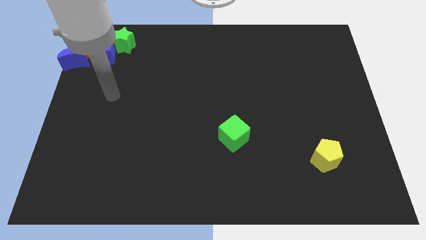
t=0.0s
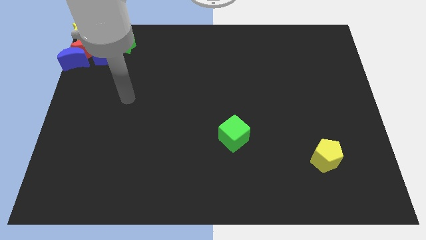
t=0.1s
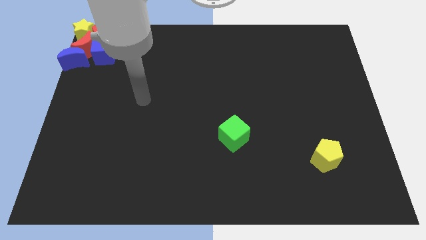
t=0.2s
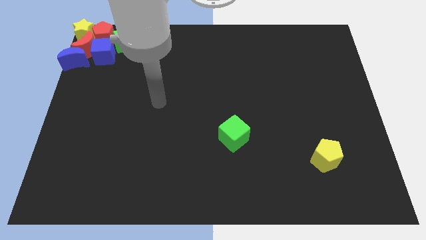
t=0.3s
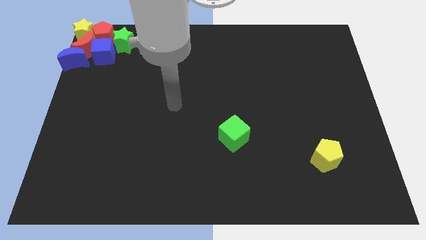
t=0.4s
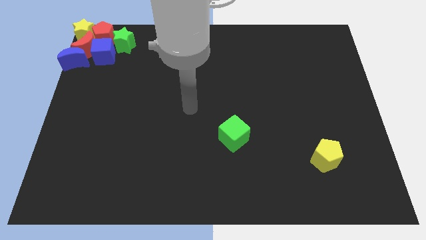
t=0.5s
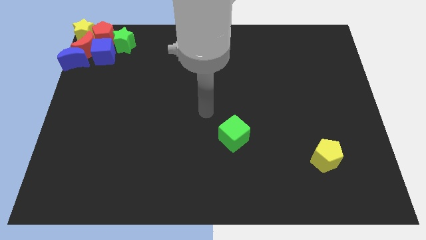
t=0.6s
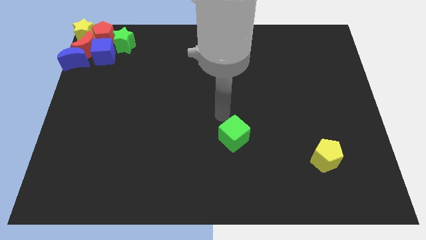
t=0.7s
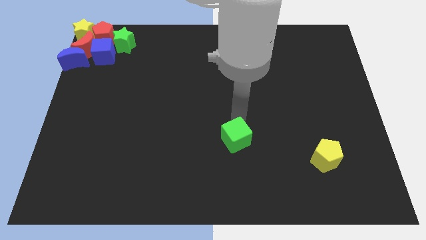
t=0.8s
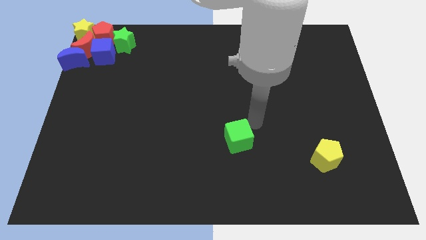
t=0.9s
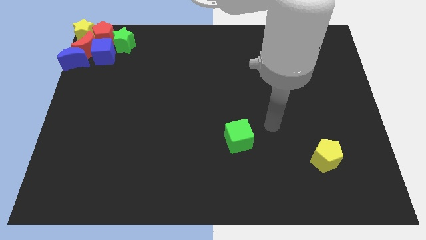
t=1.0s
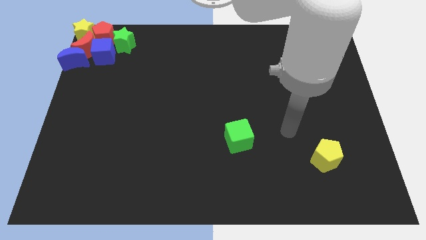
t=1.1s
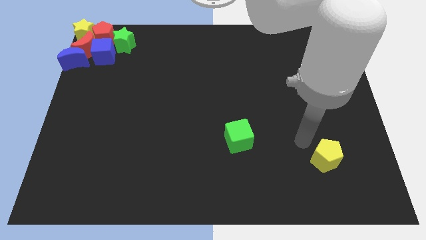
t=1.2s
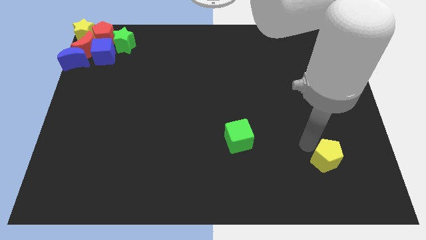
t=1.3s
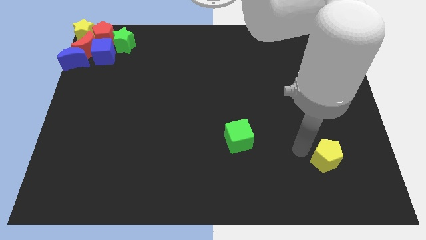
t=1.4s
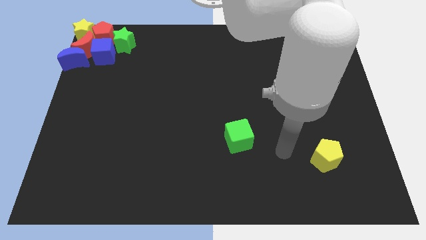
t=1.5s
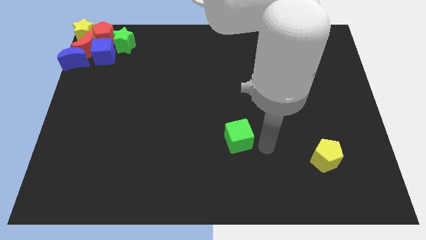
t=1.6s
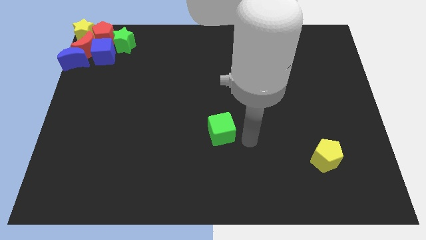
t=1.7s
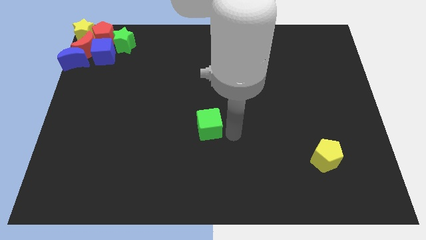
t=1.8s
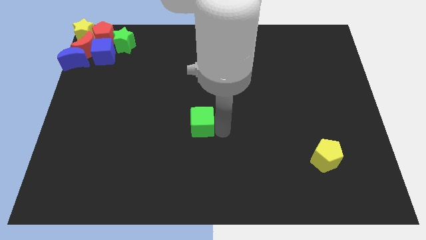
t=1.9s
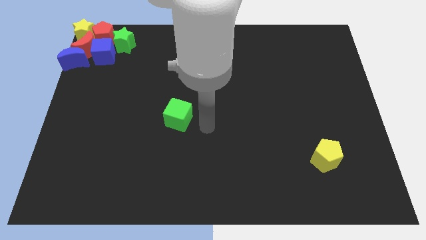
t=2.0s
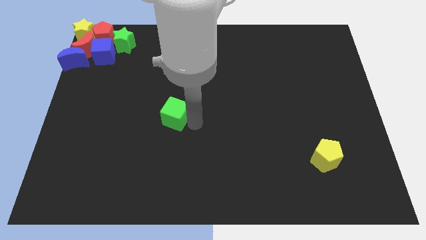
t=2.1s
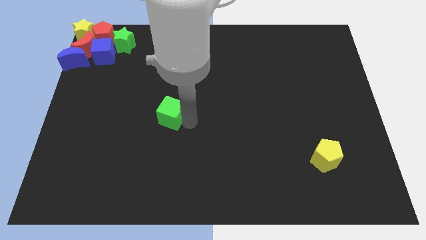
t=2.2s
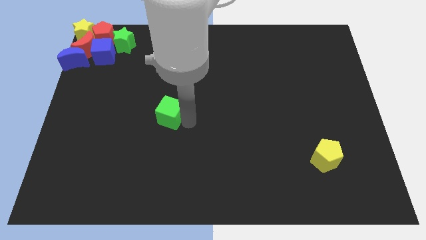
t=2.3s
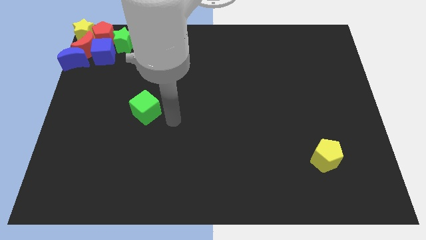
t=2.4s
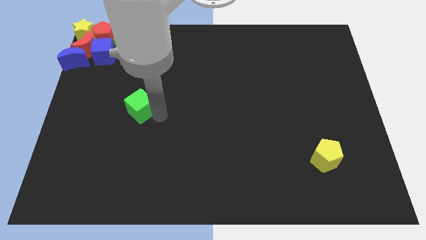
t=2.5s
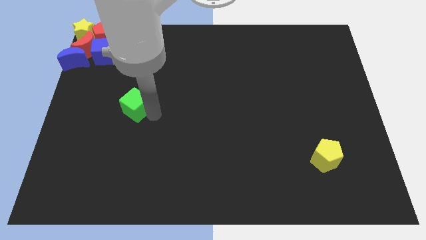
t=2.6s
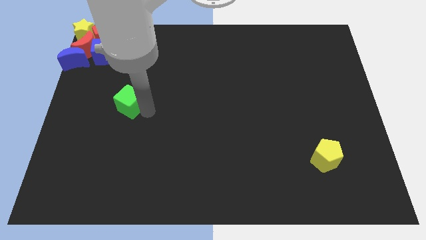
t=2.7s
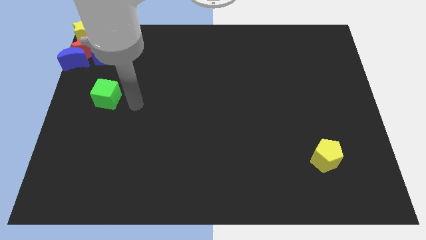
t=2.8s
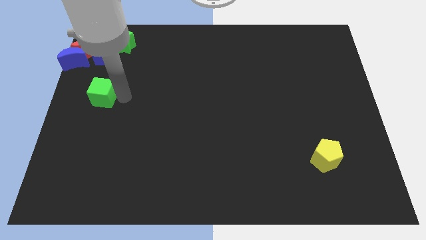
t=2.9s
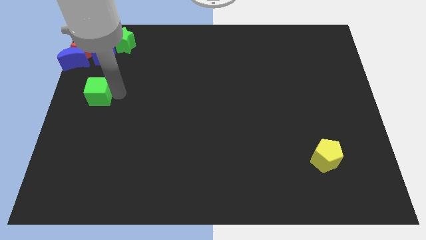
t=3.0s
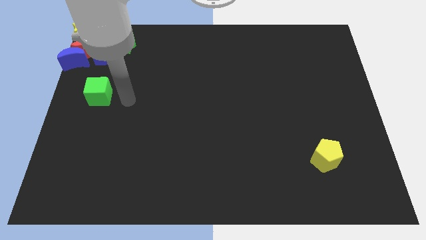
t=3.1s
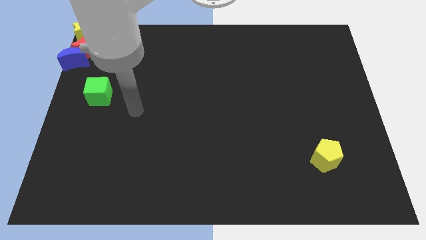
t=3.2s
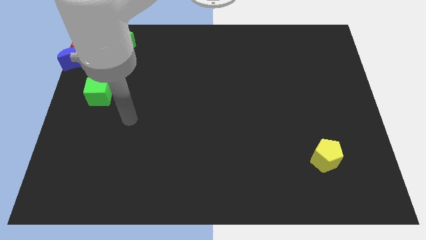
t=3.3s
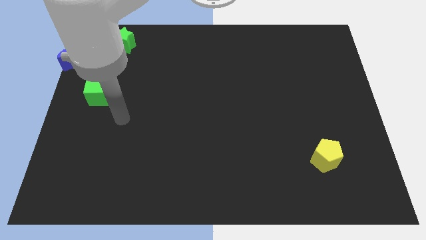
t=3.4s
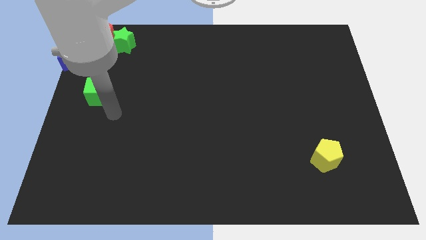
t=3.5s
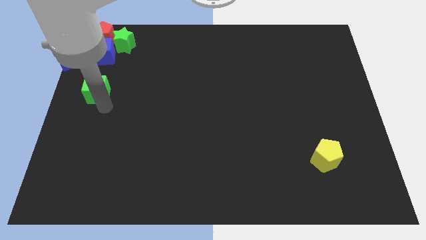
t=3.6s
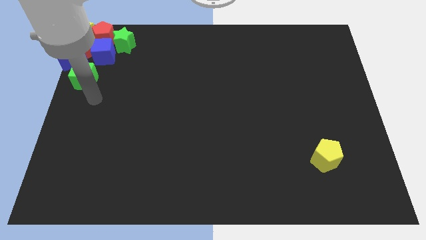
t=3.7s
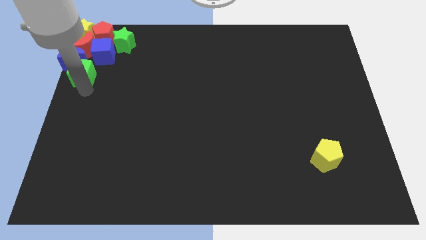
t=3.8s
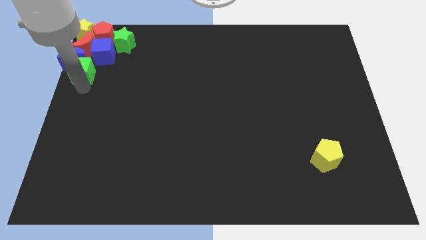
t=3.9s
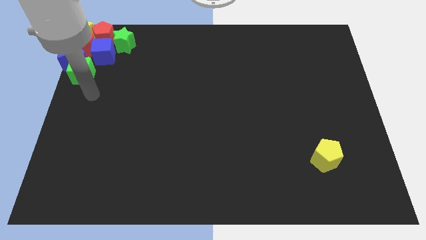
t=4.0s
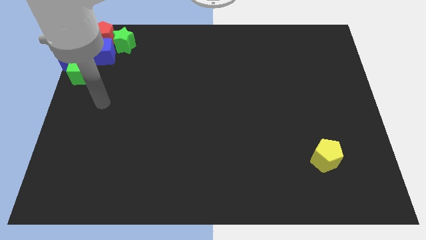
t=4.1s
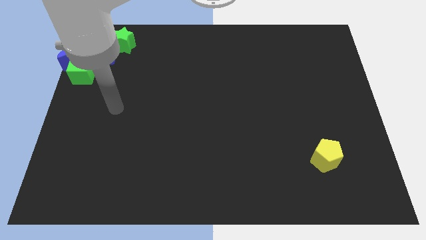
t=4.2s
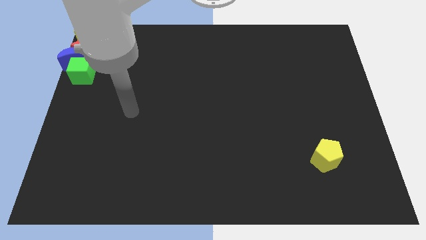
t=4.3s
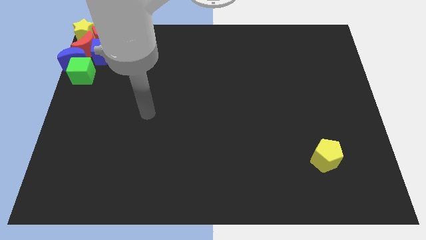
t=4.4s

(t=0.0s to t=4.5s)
place the green cube below the blue moon

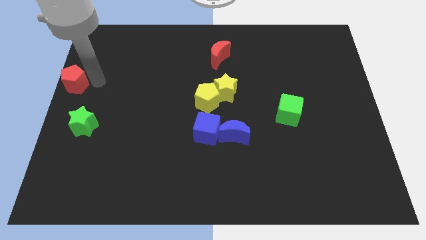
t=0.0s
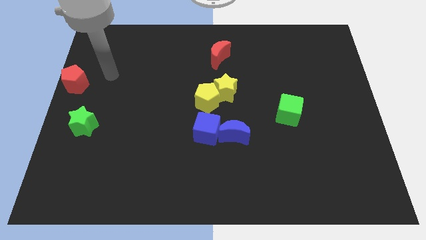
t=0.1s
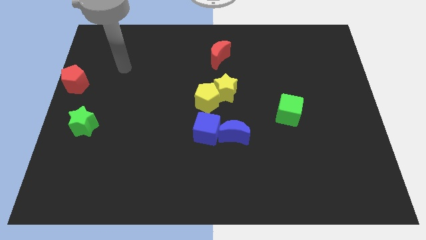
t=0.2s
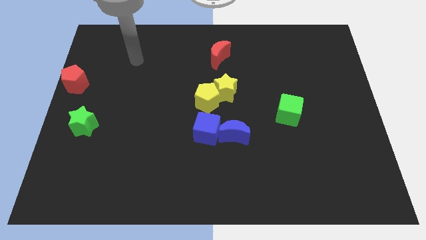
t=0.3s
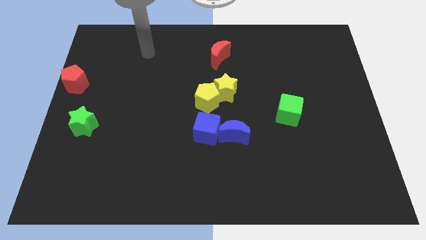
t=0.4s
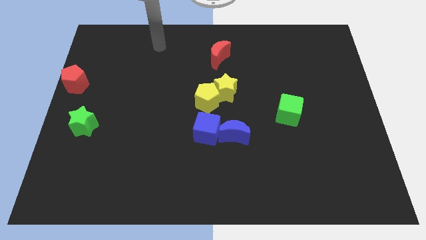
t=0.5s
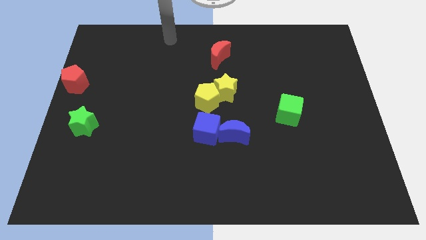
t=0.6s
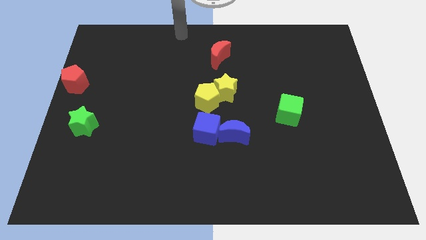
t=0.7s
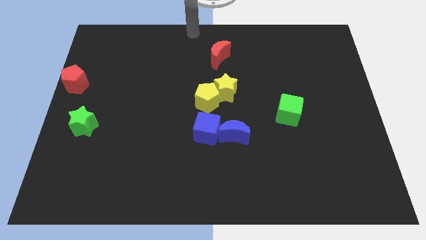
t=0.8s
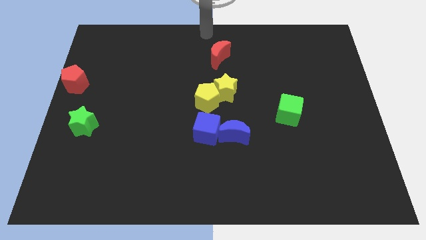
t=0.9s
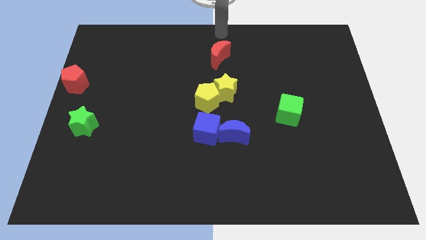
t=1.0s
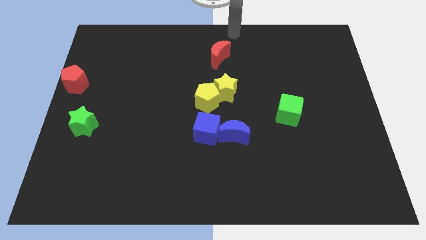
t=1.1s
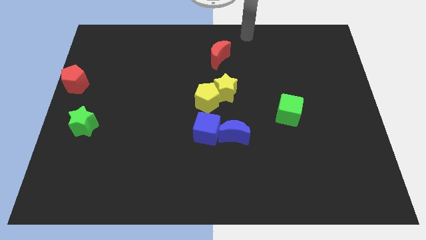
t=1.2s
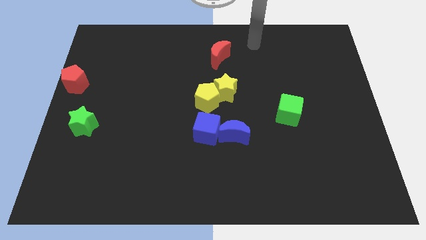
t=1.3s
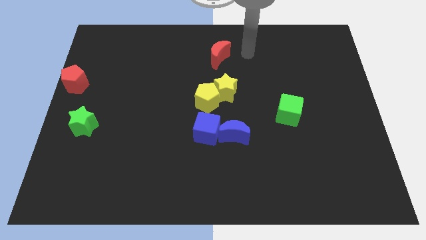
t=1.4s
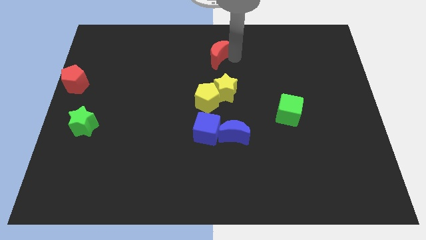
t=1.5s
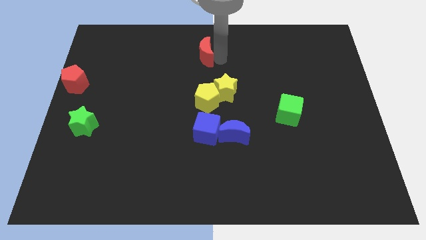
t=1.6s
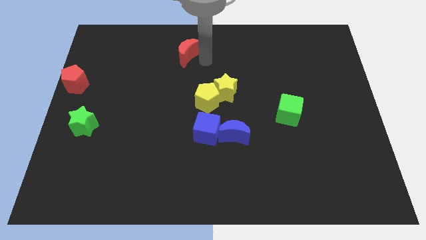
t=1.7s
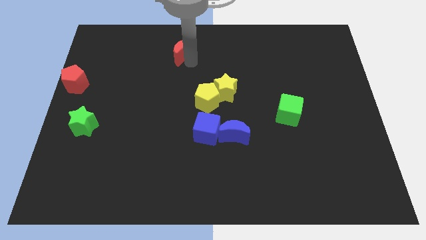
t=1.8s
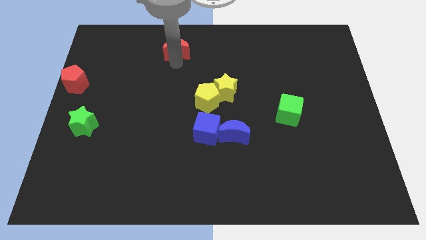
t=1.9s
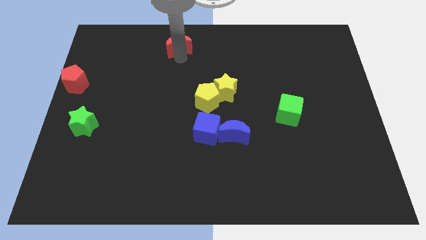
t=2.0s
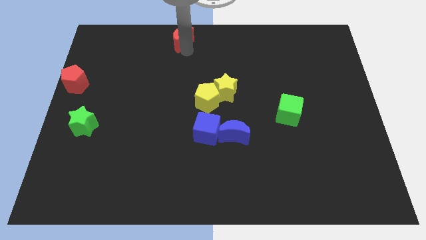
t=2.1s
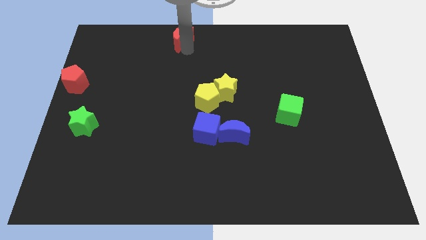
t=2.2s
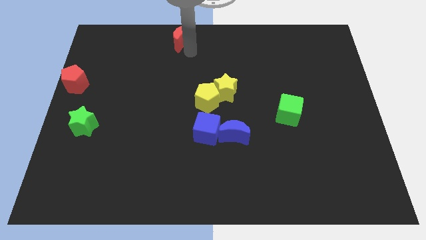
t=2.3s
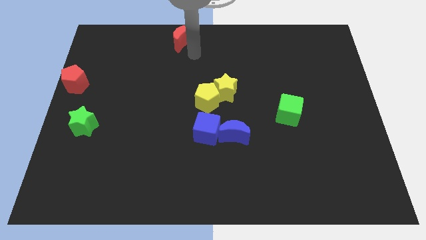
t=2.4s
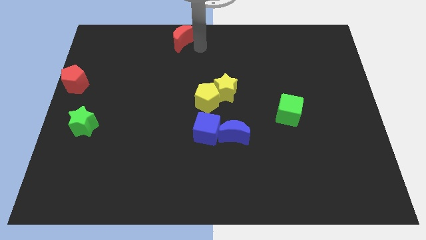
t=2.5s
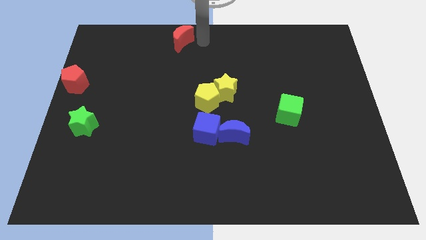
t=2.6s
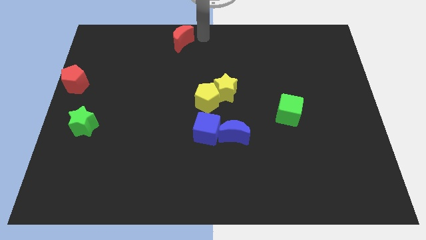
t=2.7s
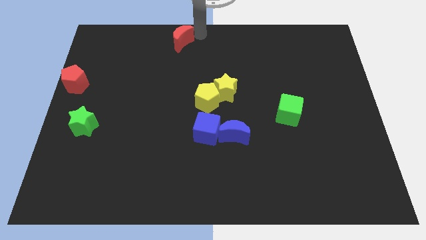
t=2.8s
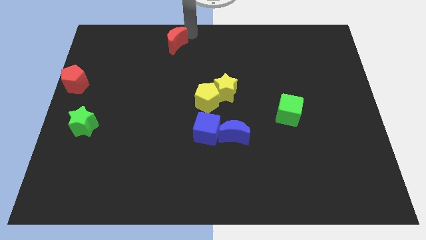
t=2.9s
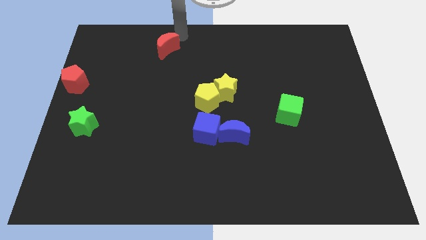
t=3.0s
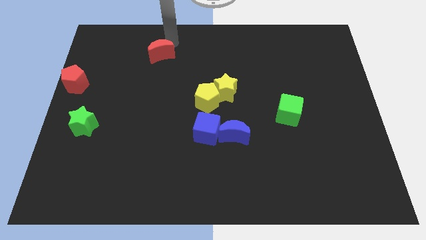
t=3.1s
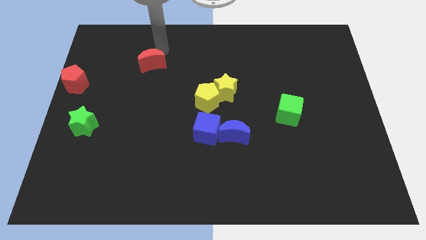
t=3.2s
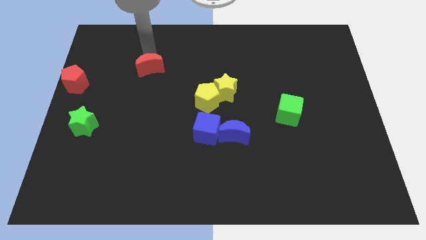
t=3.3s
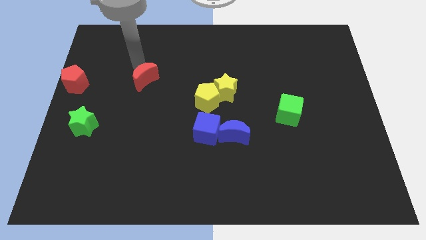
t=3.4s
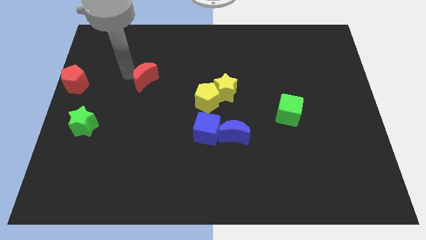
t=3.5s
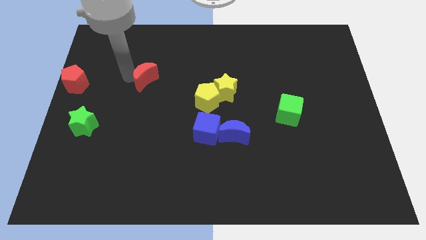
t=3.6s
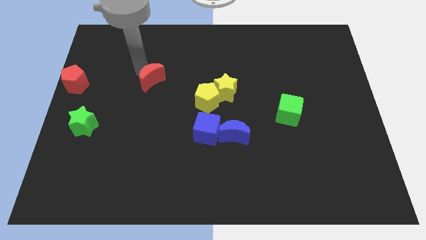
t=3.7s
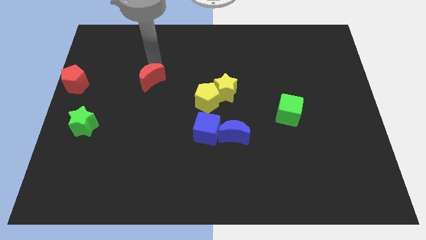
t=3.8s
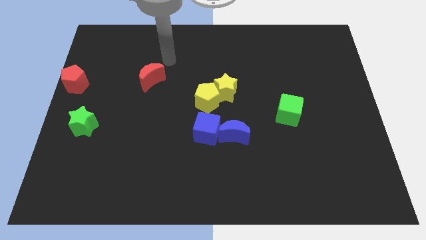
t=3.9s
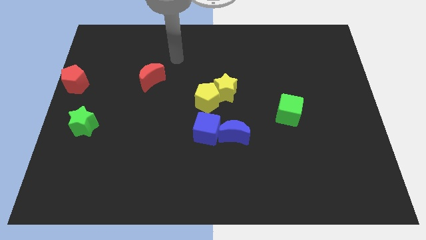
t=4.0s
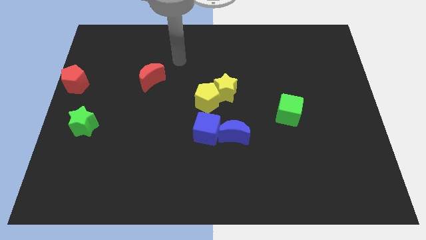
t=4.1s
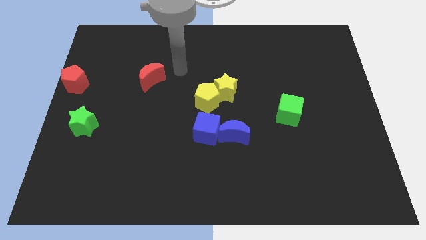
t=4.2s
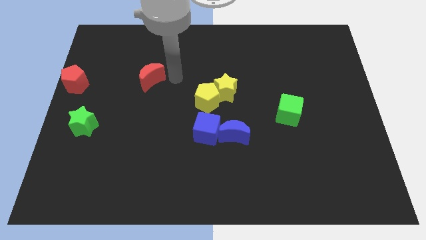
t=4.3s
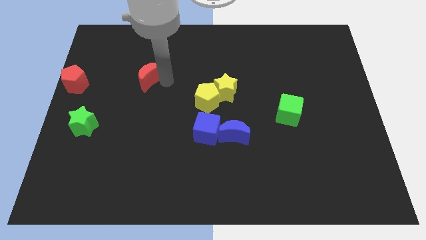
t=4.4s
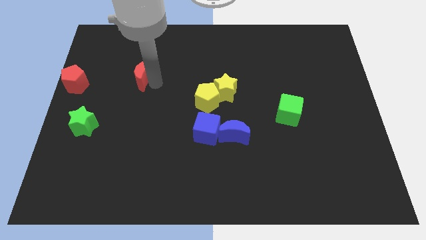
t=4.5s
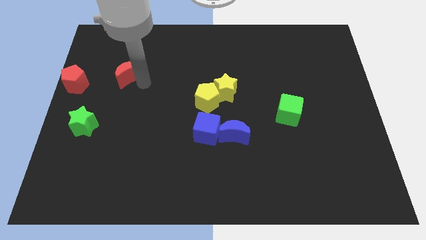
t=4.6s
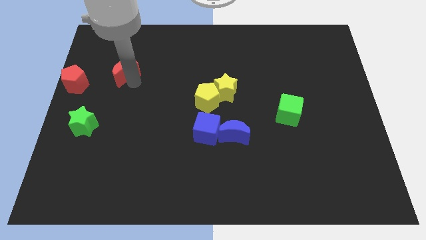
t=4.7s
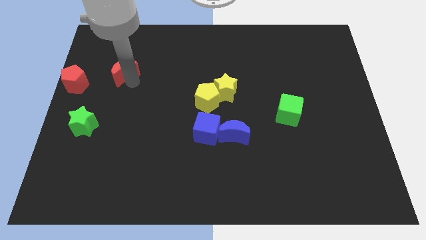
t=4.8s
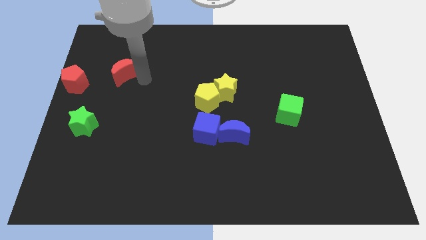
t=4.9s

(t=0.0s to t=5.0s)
move the red moon to the left of the red pentagon
